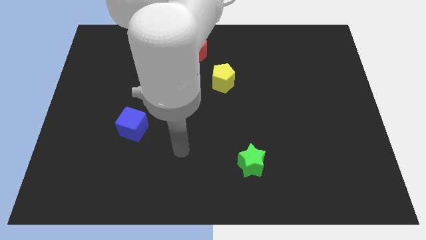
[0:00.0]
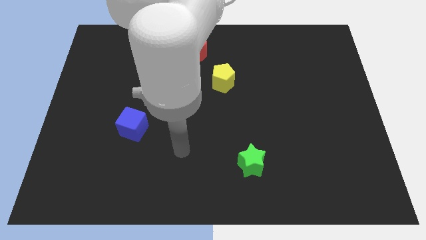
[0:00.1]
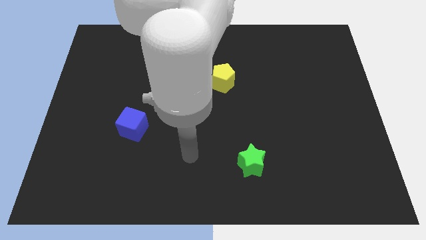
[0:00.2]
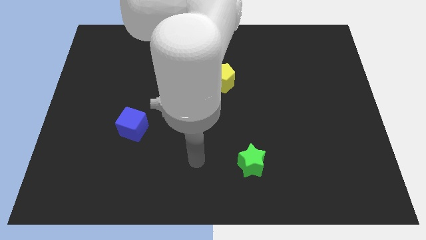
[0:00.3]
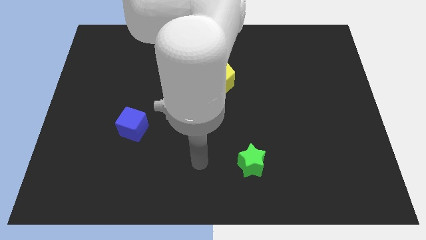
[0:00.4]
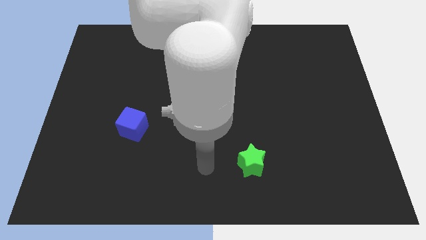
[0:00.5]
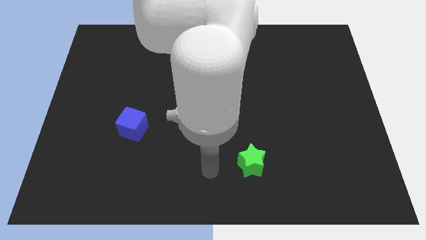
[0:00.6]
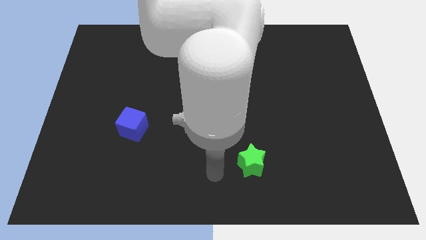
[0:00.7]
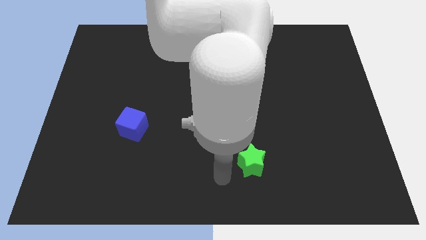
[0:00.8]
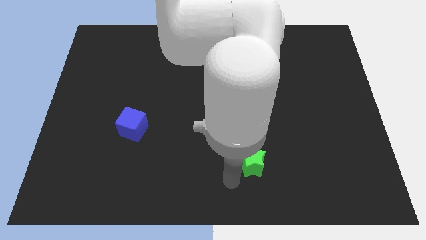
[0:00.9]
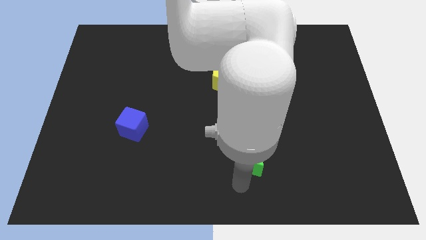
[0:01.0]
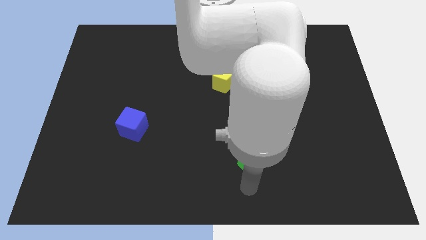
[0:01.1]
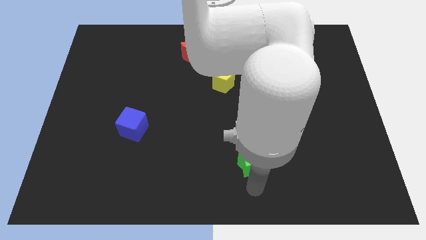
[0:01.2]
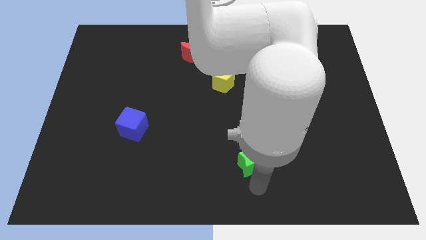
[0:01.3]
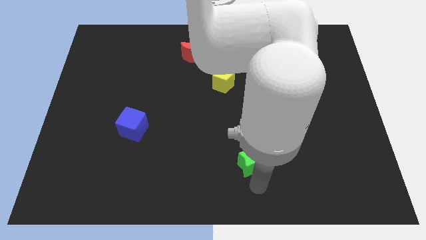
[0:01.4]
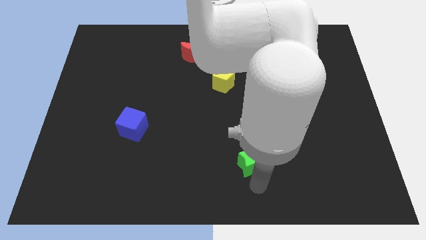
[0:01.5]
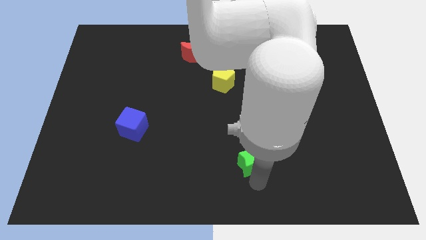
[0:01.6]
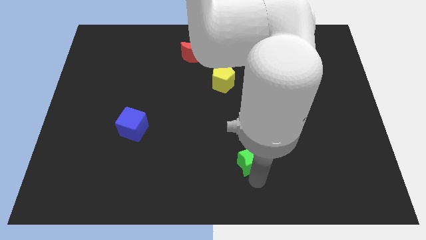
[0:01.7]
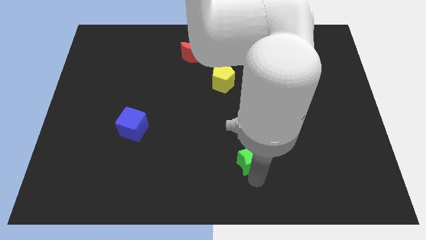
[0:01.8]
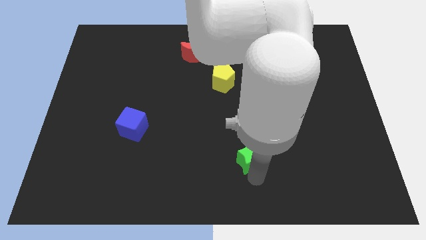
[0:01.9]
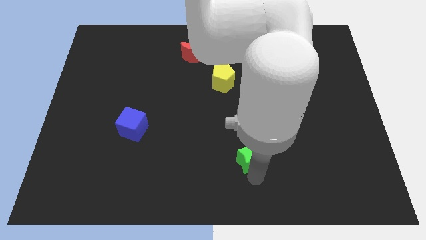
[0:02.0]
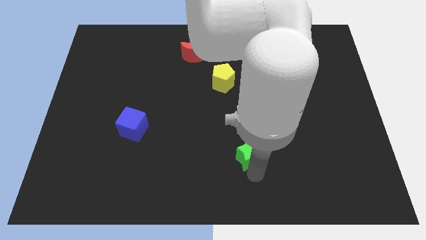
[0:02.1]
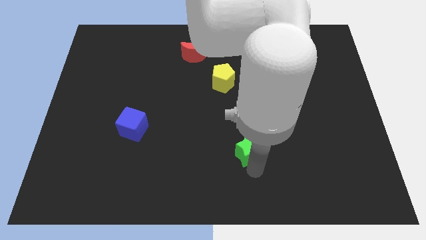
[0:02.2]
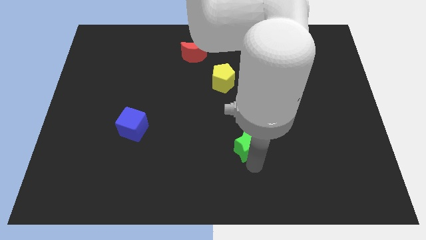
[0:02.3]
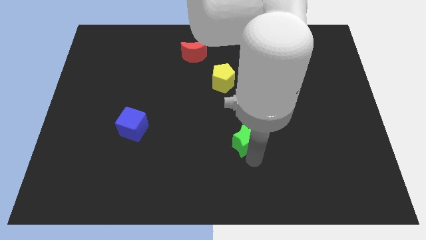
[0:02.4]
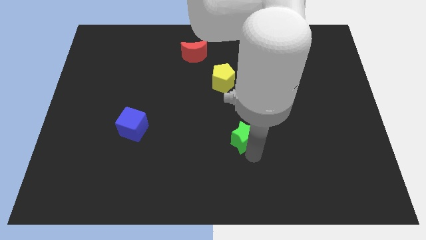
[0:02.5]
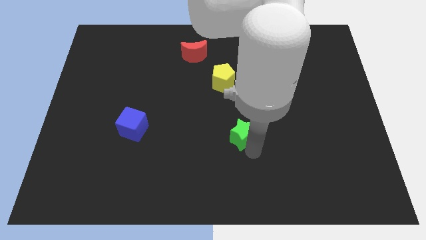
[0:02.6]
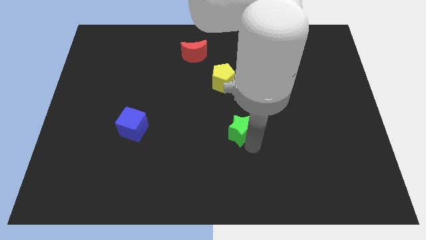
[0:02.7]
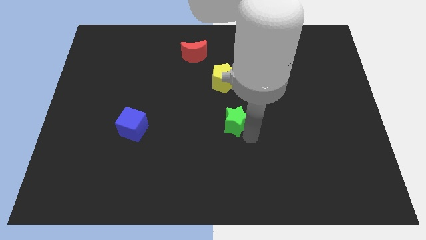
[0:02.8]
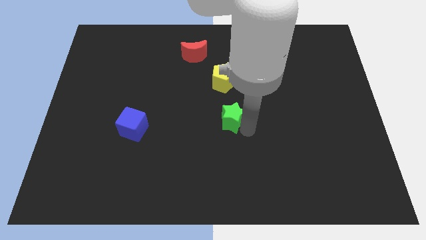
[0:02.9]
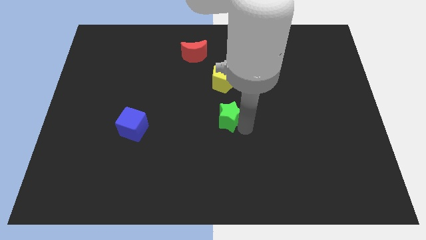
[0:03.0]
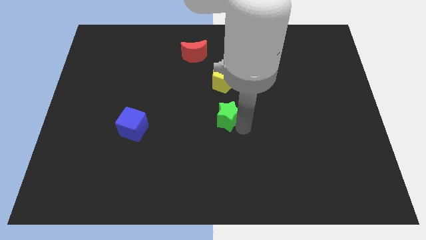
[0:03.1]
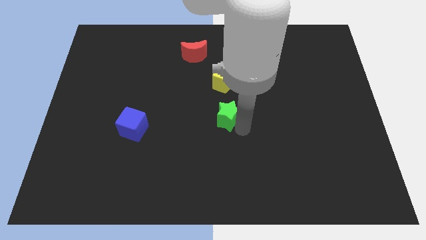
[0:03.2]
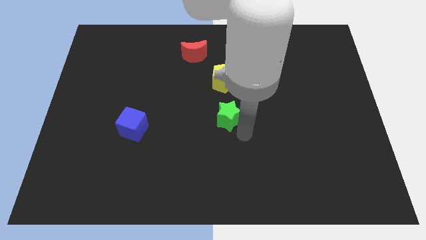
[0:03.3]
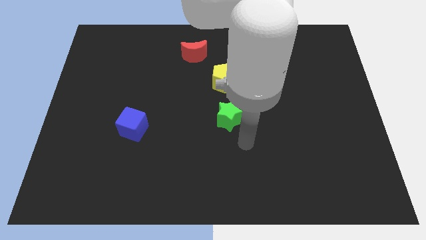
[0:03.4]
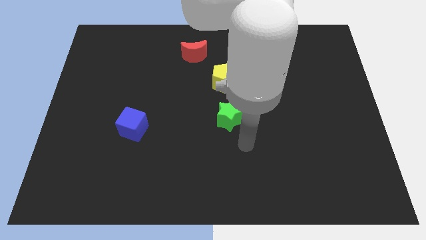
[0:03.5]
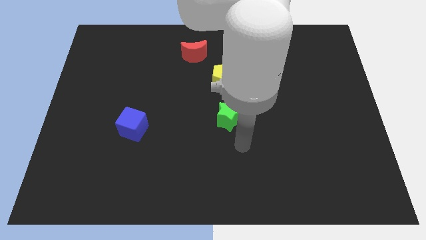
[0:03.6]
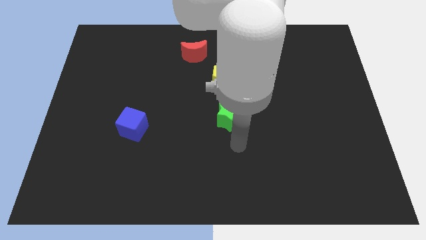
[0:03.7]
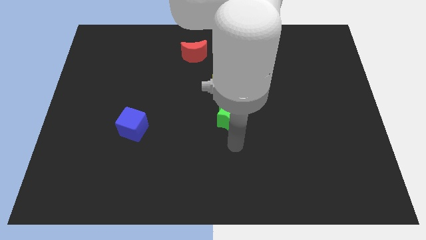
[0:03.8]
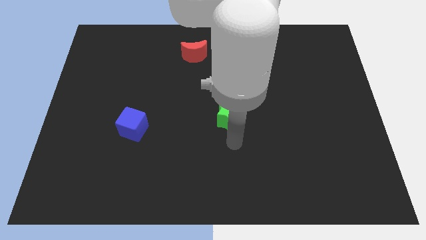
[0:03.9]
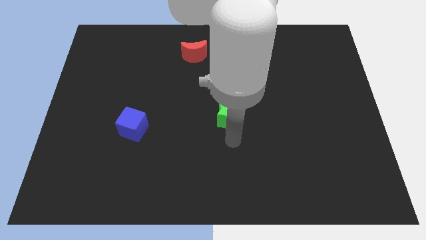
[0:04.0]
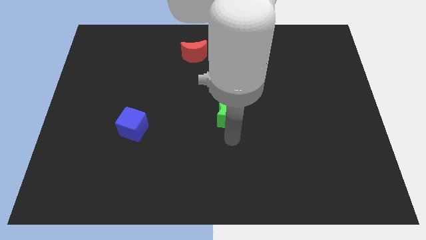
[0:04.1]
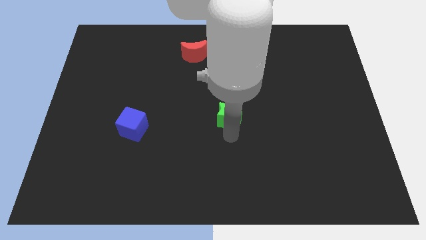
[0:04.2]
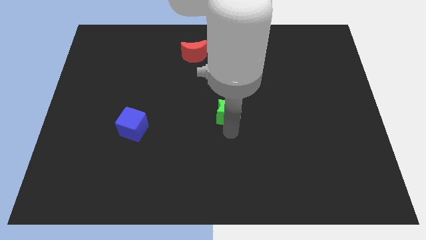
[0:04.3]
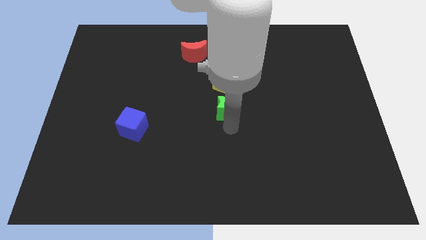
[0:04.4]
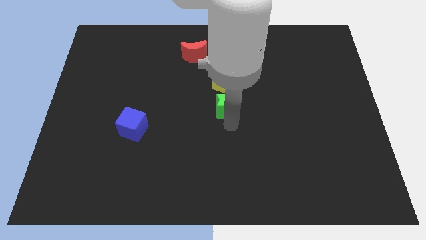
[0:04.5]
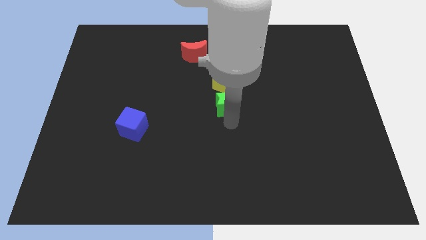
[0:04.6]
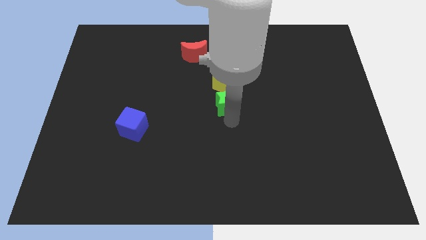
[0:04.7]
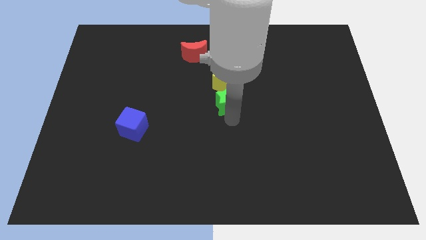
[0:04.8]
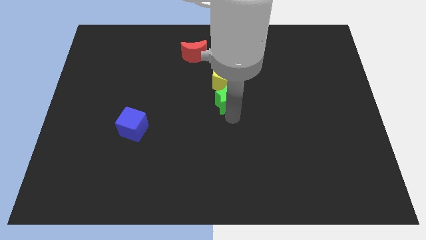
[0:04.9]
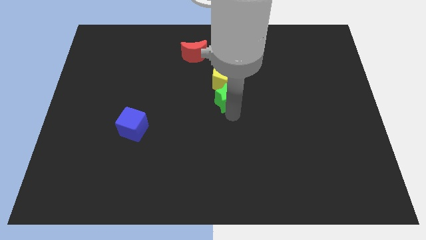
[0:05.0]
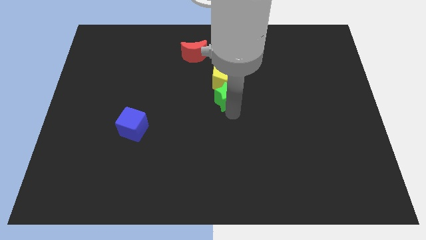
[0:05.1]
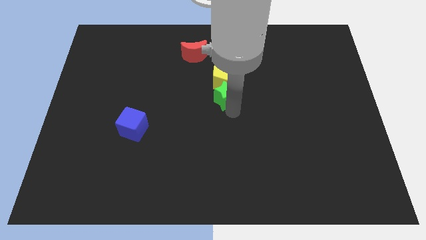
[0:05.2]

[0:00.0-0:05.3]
move the star close to the yellow block

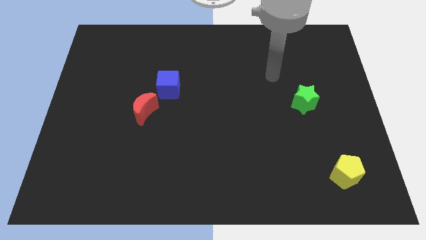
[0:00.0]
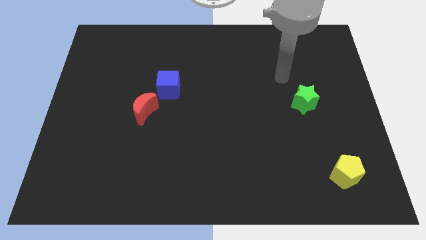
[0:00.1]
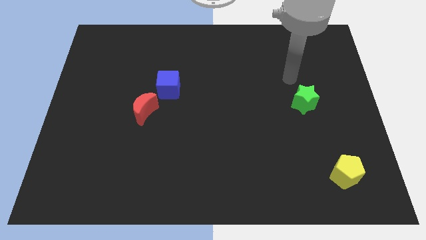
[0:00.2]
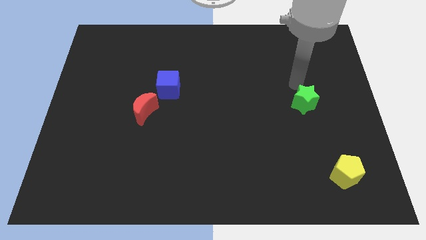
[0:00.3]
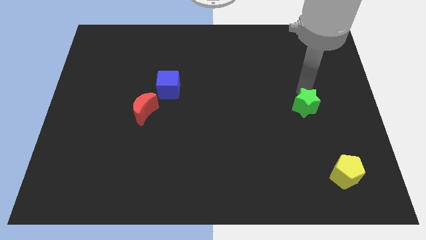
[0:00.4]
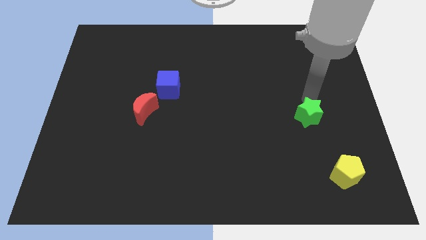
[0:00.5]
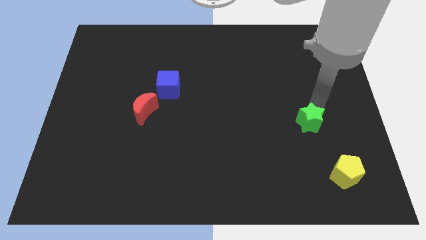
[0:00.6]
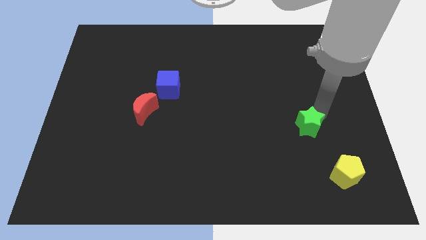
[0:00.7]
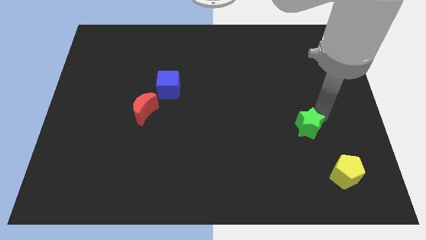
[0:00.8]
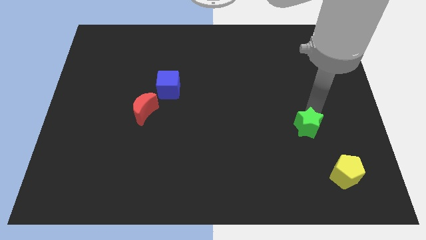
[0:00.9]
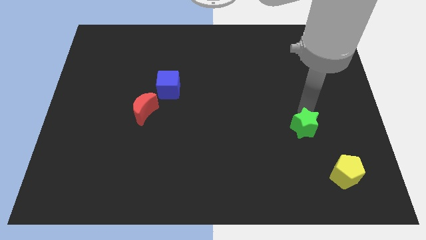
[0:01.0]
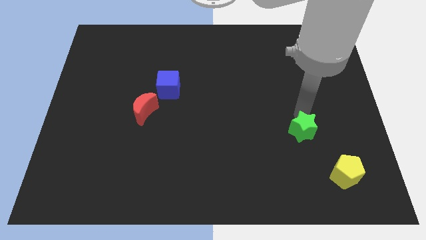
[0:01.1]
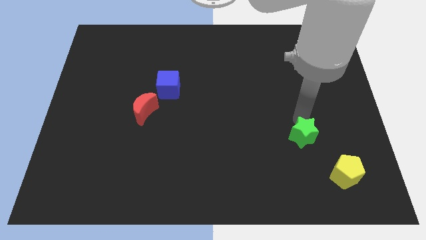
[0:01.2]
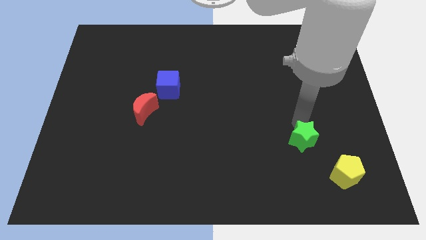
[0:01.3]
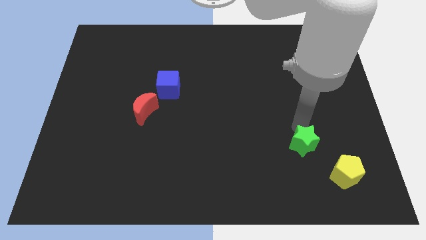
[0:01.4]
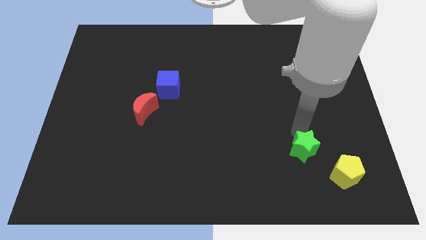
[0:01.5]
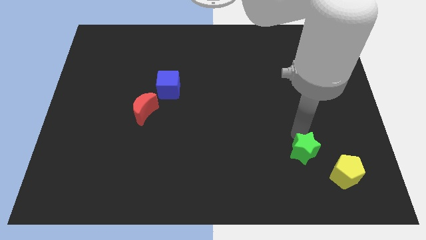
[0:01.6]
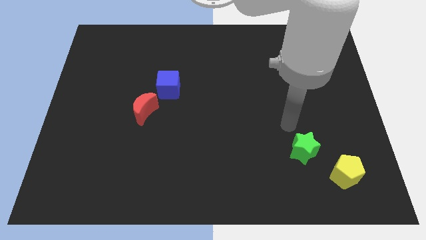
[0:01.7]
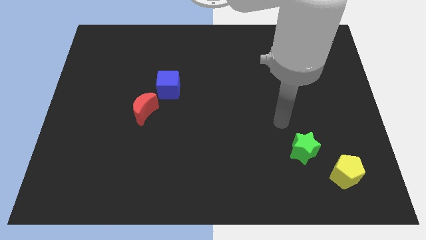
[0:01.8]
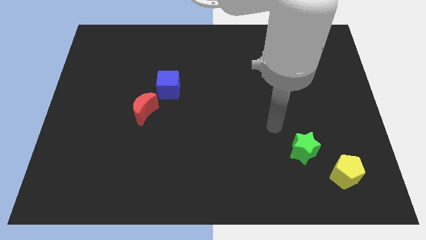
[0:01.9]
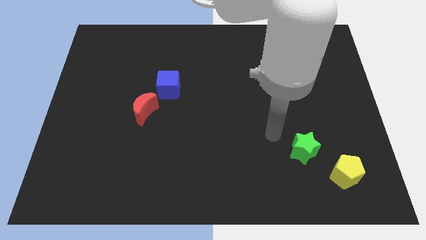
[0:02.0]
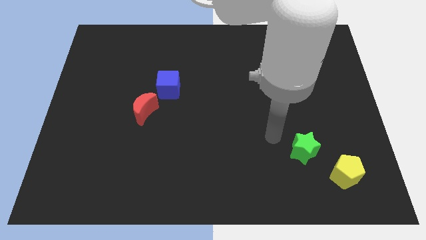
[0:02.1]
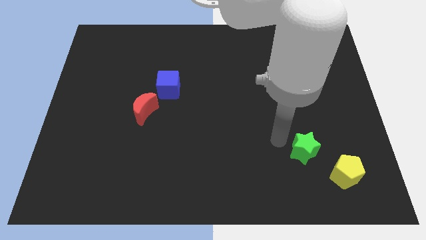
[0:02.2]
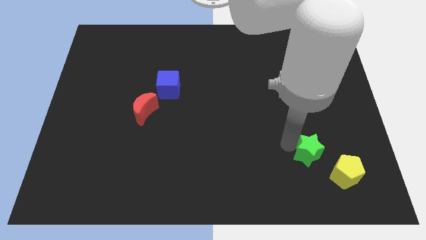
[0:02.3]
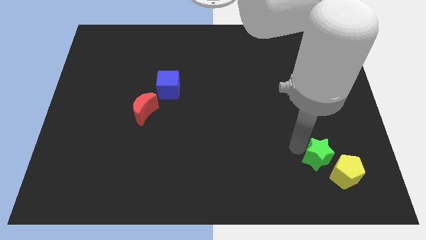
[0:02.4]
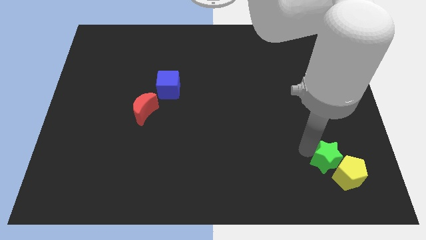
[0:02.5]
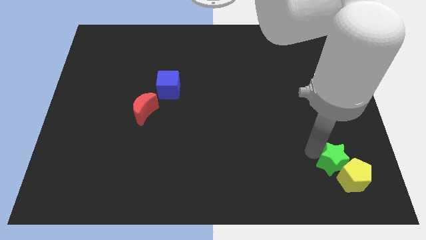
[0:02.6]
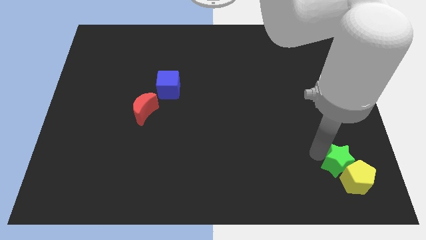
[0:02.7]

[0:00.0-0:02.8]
move the green star towards the pentagon

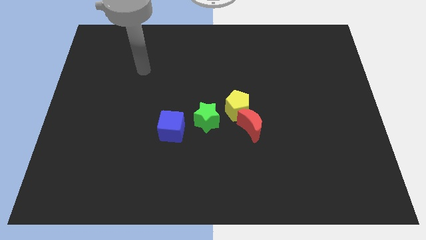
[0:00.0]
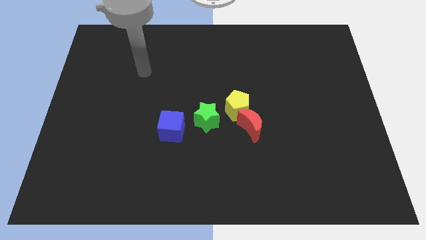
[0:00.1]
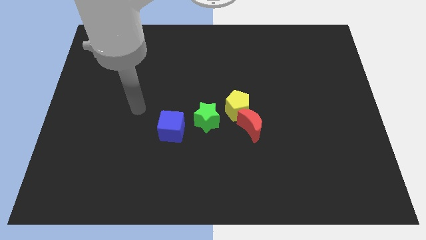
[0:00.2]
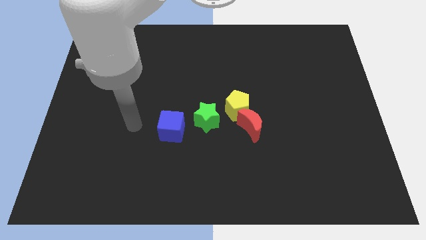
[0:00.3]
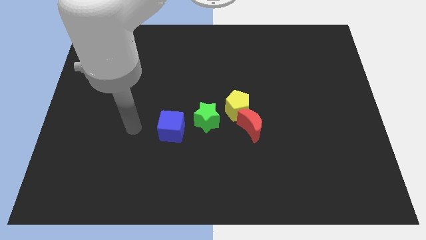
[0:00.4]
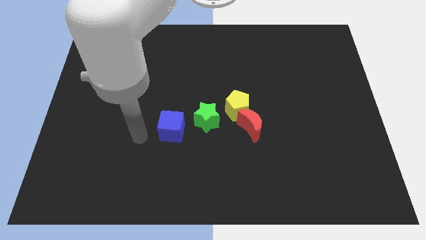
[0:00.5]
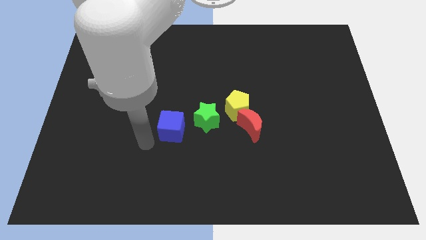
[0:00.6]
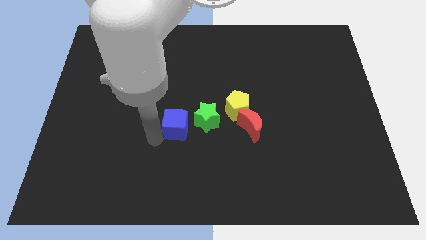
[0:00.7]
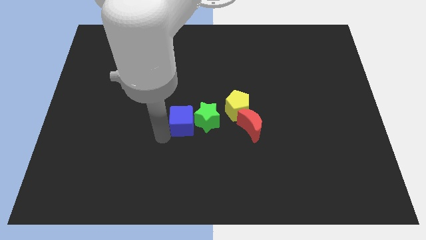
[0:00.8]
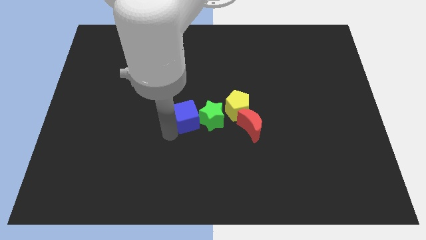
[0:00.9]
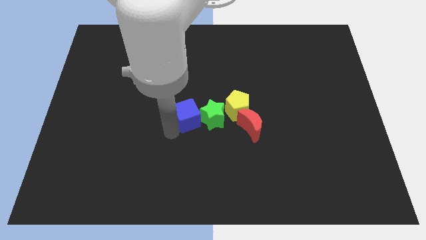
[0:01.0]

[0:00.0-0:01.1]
slide the blue cube to the star
